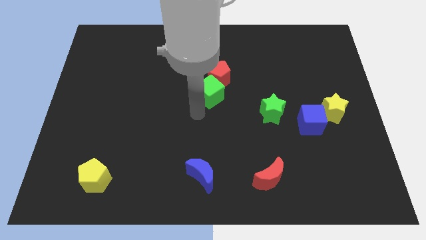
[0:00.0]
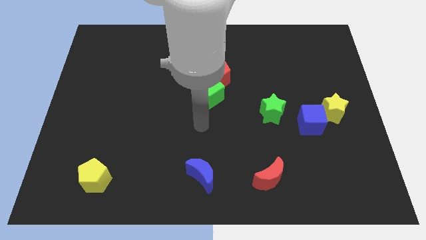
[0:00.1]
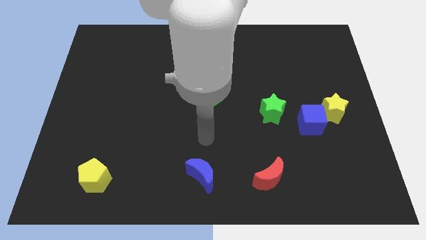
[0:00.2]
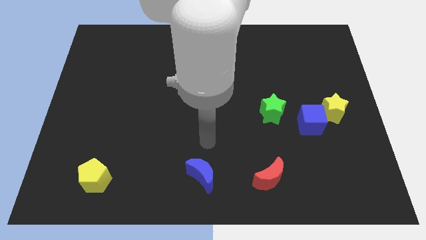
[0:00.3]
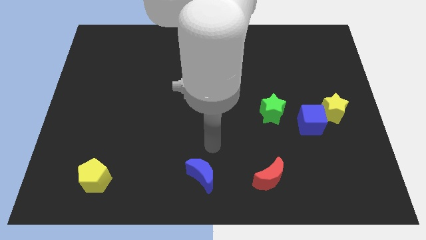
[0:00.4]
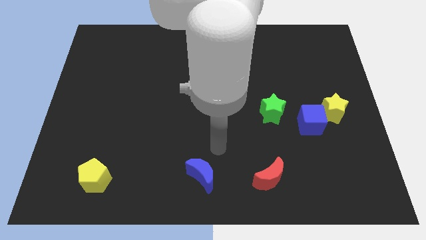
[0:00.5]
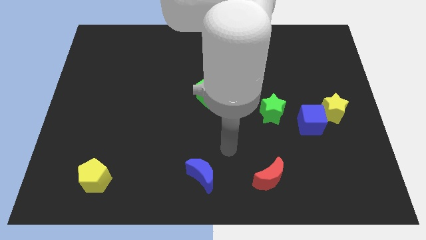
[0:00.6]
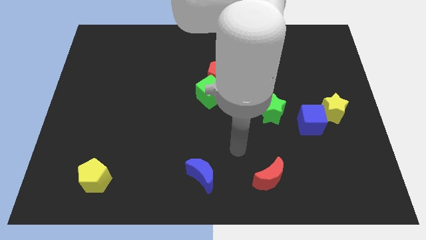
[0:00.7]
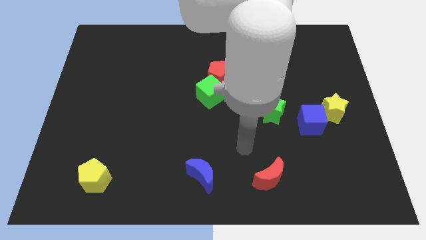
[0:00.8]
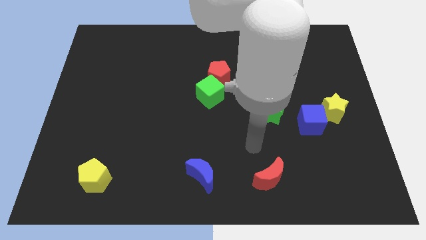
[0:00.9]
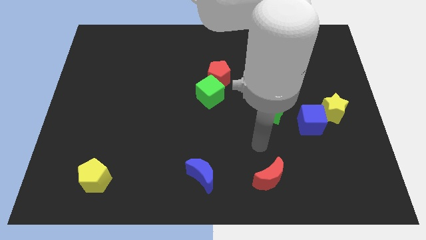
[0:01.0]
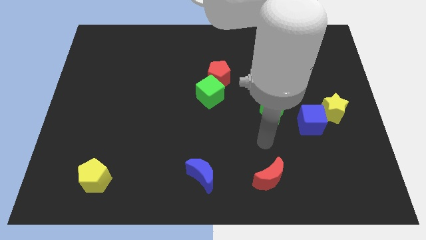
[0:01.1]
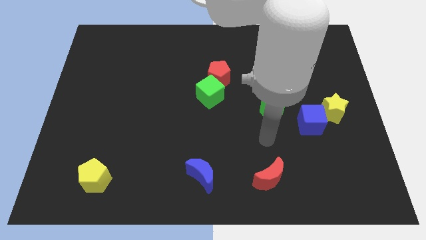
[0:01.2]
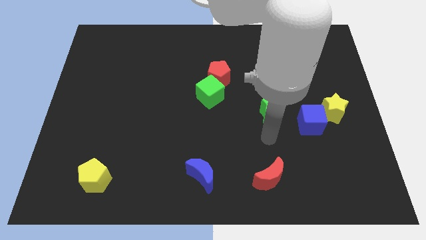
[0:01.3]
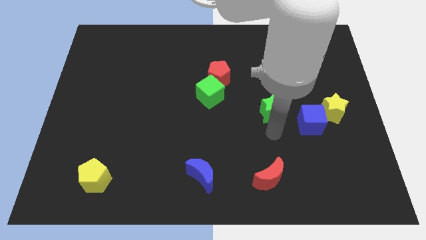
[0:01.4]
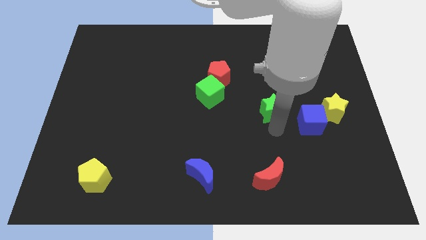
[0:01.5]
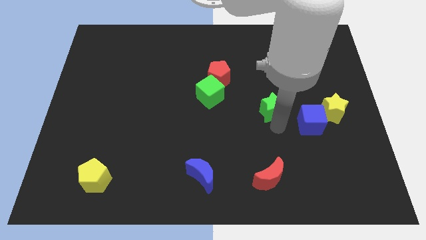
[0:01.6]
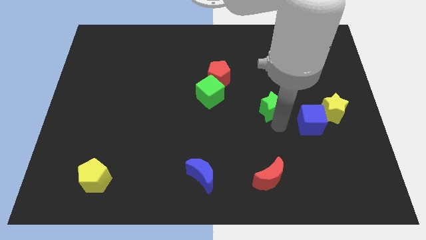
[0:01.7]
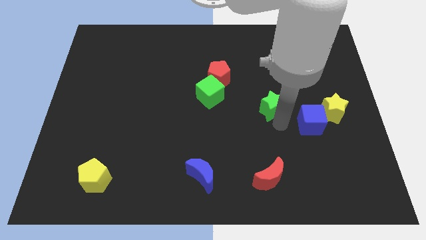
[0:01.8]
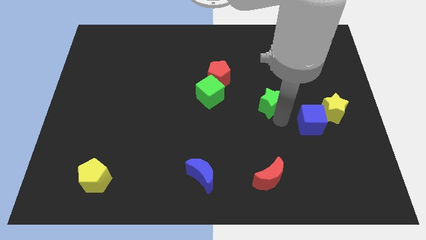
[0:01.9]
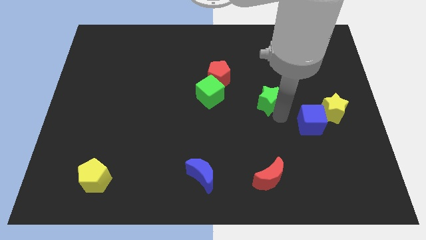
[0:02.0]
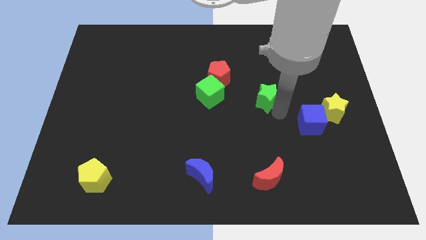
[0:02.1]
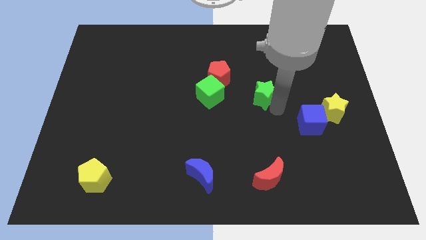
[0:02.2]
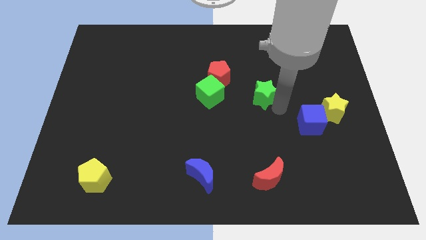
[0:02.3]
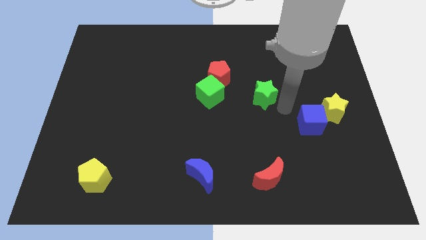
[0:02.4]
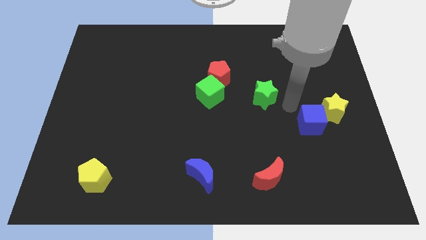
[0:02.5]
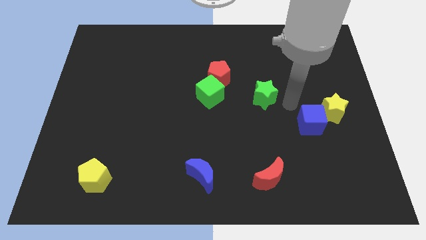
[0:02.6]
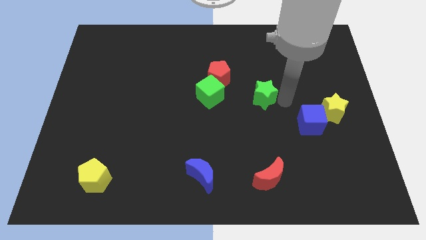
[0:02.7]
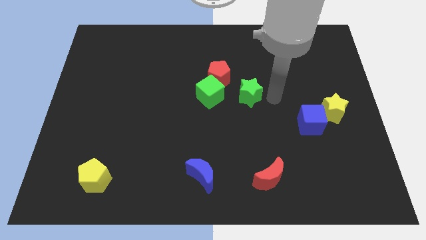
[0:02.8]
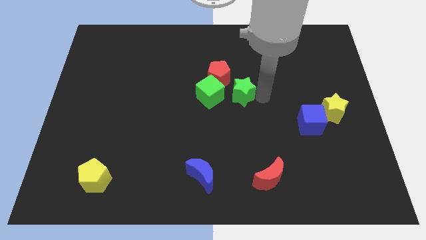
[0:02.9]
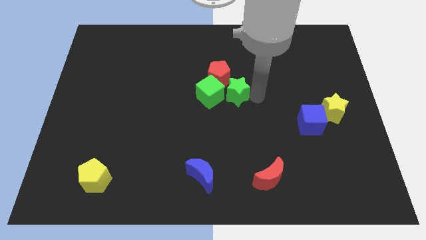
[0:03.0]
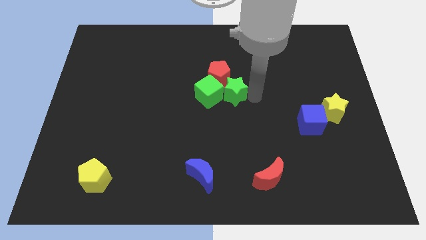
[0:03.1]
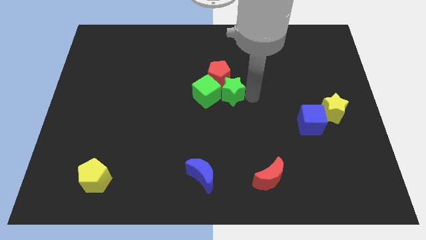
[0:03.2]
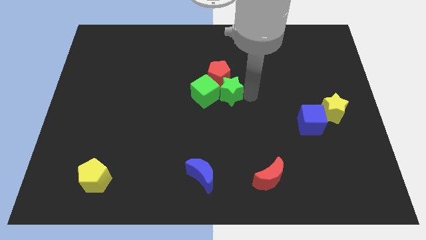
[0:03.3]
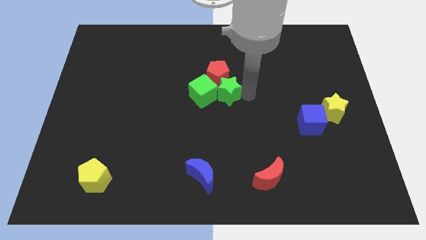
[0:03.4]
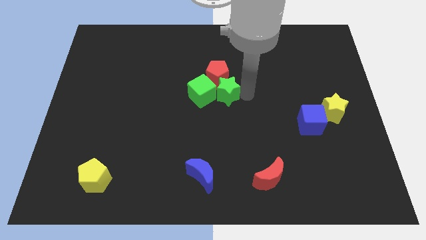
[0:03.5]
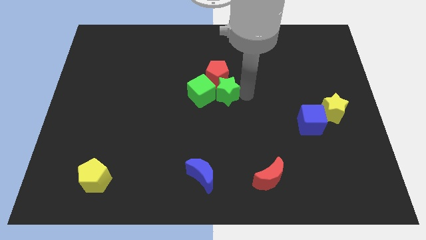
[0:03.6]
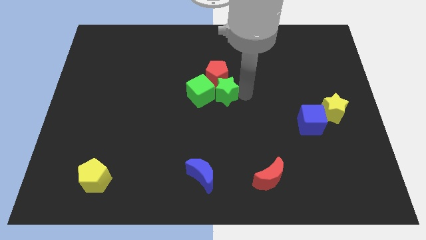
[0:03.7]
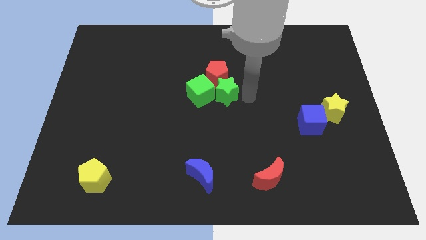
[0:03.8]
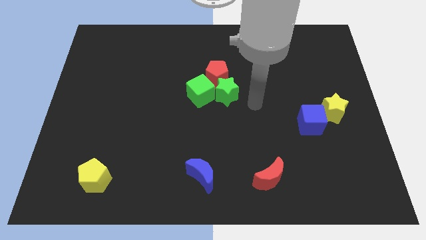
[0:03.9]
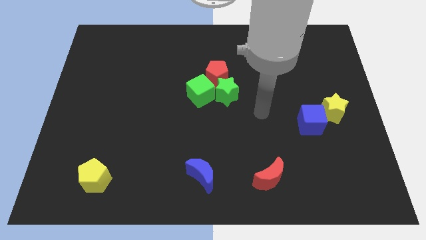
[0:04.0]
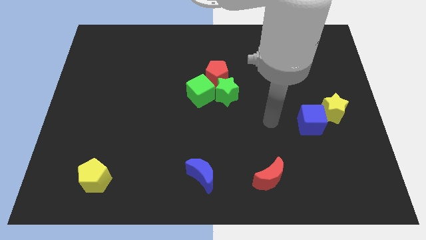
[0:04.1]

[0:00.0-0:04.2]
push the green star into the green cube

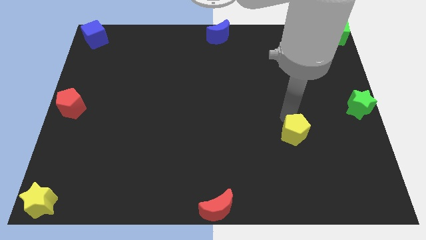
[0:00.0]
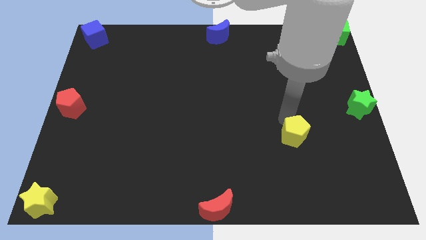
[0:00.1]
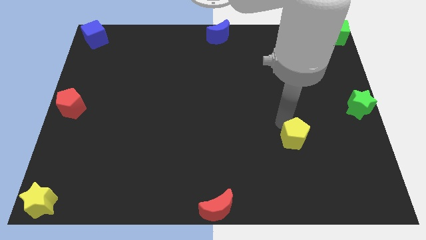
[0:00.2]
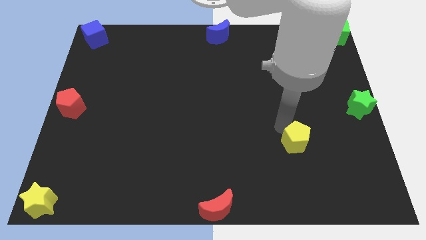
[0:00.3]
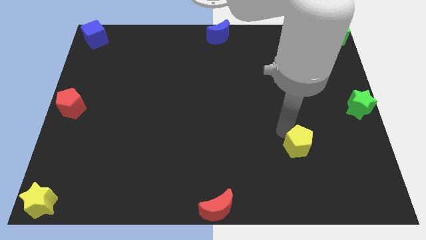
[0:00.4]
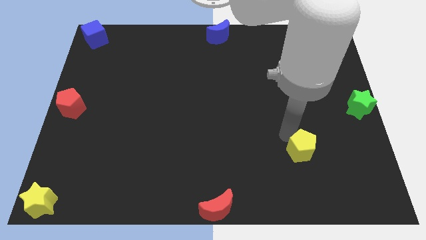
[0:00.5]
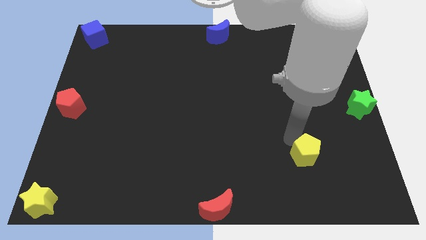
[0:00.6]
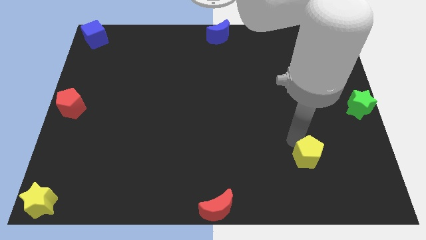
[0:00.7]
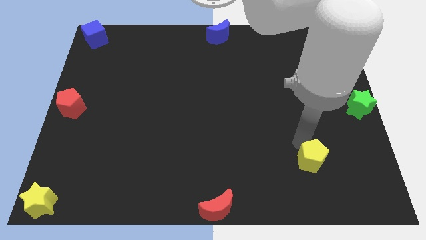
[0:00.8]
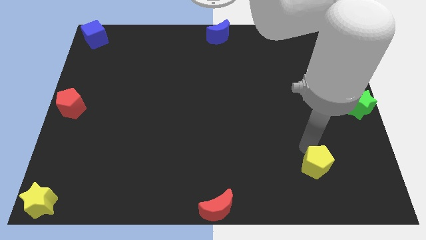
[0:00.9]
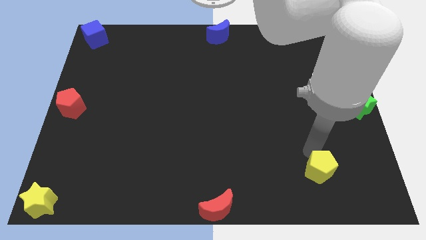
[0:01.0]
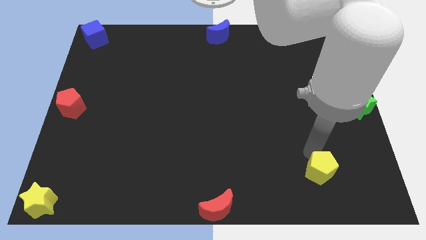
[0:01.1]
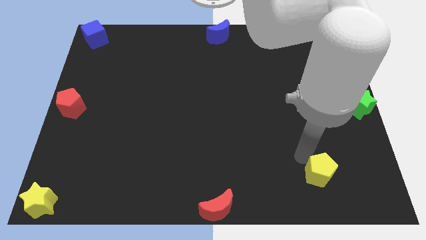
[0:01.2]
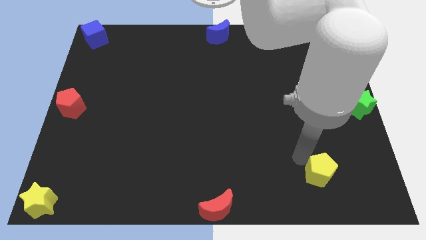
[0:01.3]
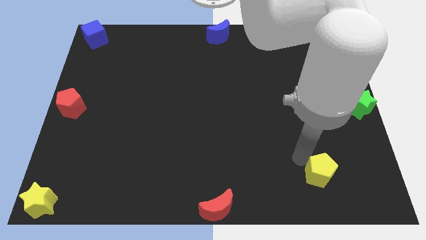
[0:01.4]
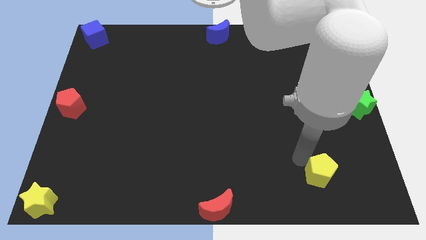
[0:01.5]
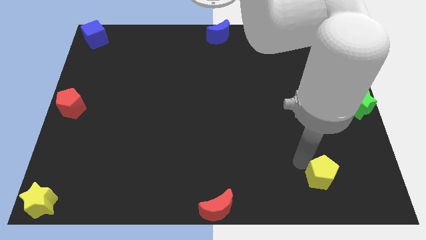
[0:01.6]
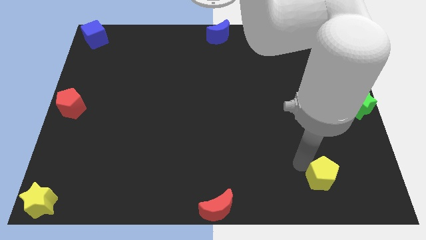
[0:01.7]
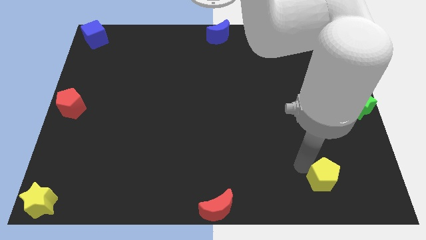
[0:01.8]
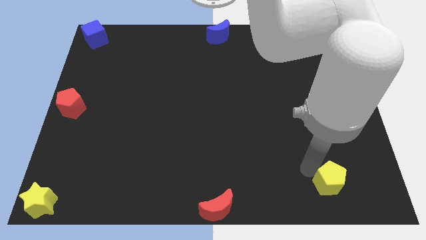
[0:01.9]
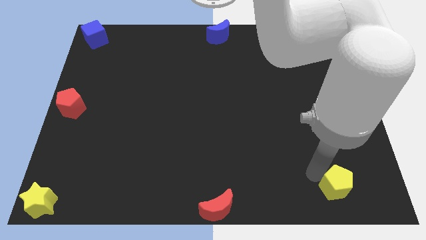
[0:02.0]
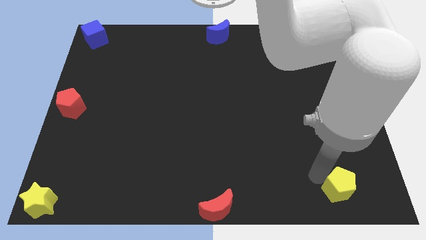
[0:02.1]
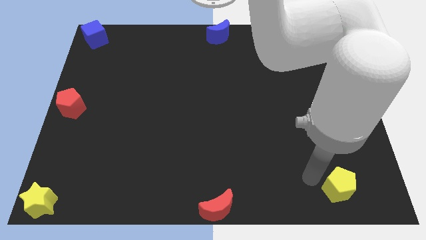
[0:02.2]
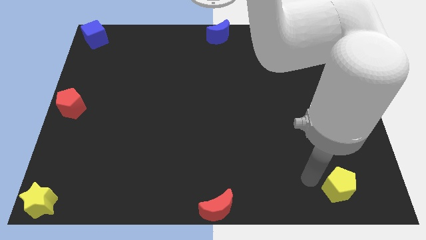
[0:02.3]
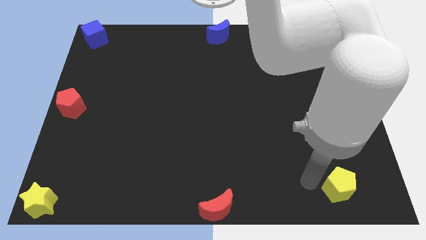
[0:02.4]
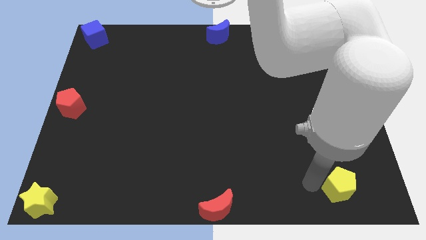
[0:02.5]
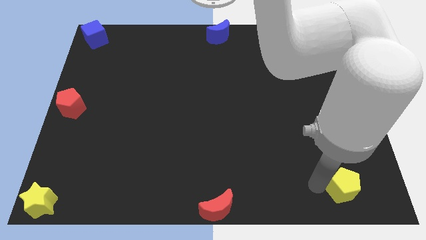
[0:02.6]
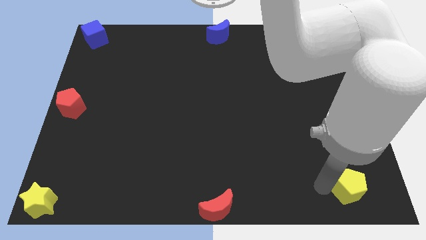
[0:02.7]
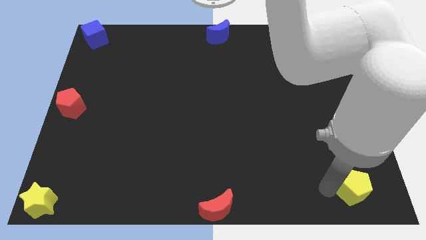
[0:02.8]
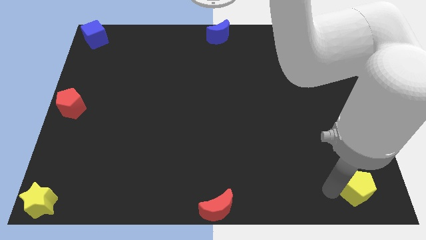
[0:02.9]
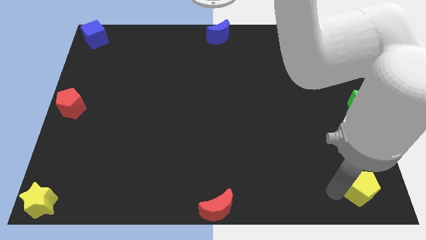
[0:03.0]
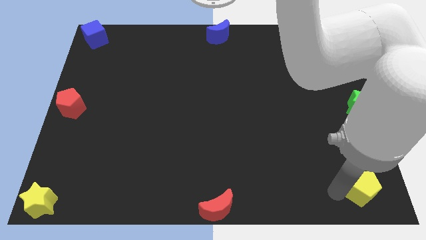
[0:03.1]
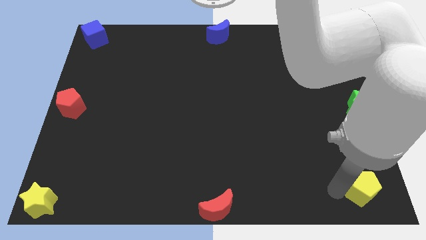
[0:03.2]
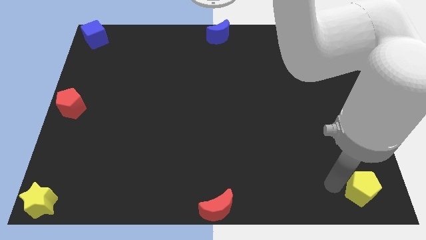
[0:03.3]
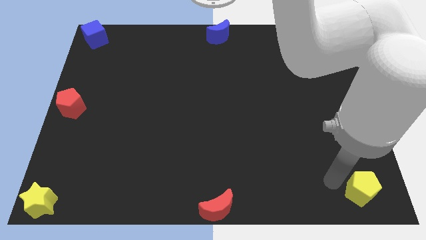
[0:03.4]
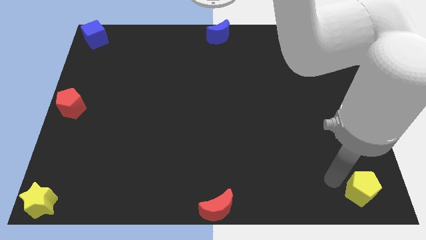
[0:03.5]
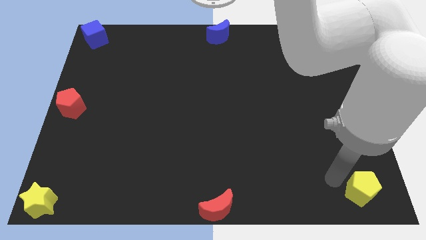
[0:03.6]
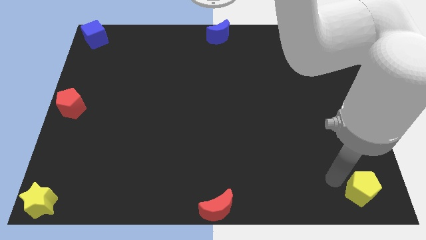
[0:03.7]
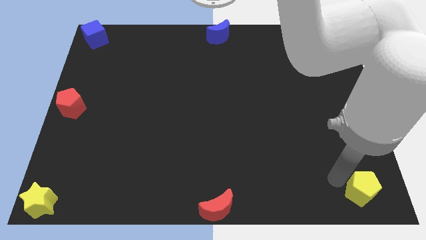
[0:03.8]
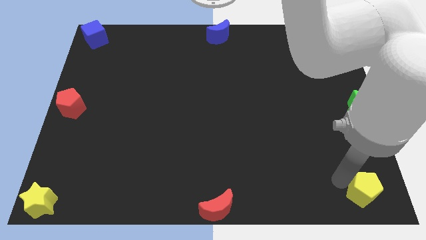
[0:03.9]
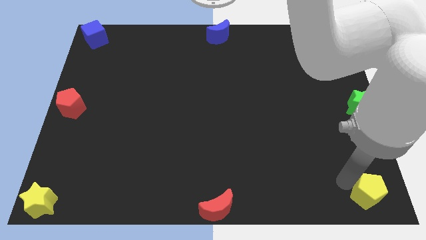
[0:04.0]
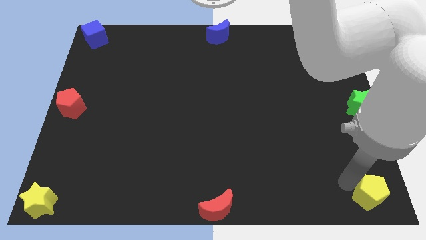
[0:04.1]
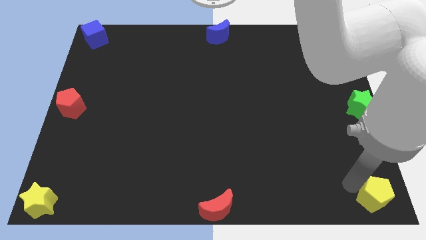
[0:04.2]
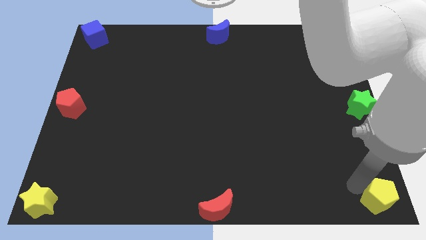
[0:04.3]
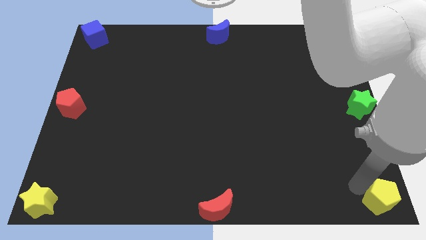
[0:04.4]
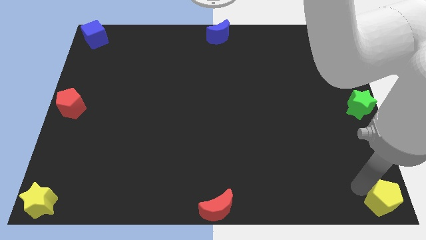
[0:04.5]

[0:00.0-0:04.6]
place the yellow pentagon to the bottom right of the board

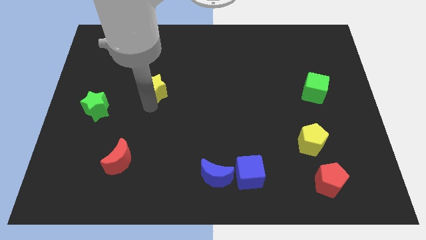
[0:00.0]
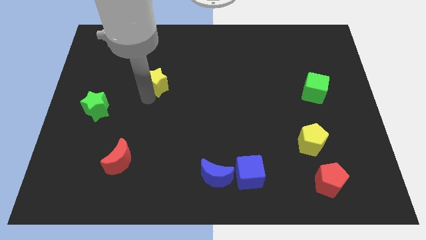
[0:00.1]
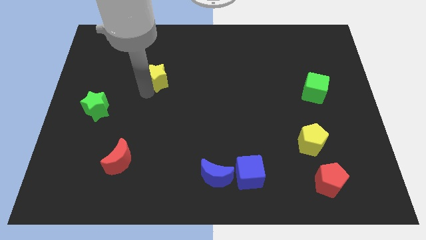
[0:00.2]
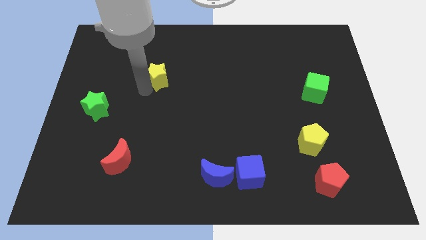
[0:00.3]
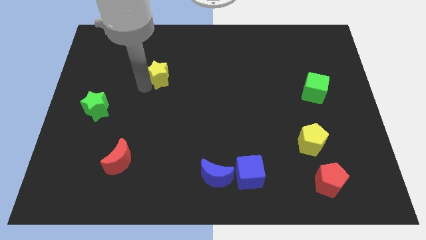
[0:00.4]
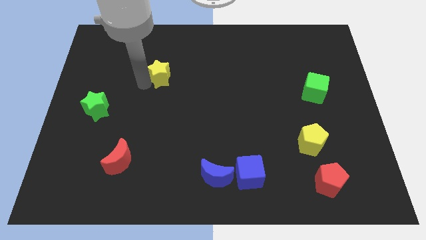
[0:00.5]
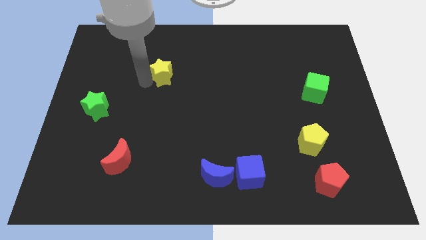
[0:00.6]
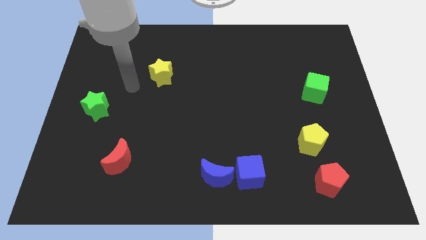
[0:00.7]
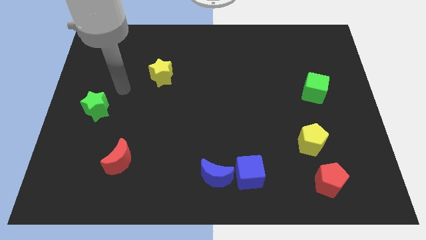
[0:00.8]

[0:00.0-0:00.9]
move the yellow star slightly up
